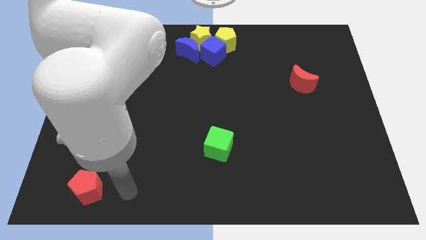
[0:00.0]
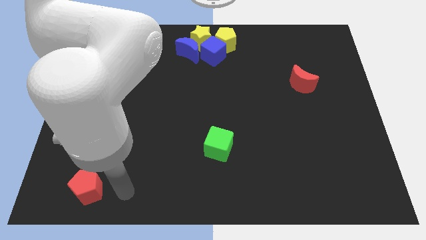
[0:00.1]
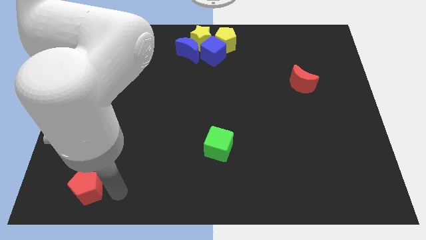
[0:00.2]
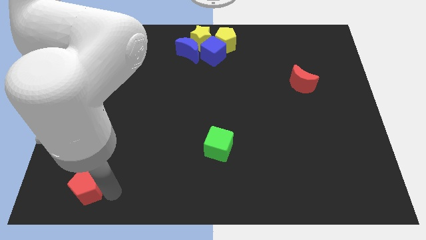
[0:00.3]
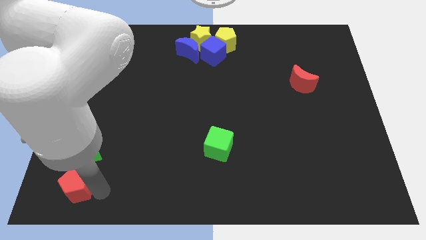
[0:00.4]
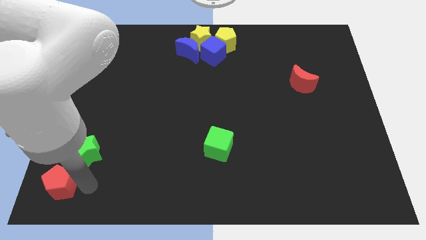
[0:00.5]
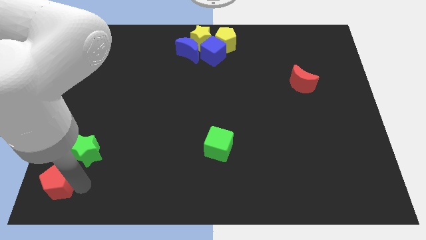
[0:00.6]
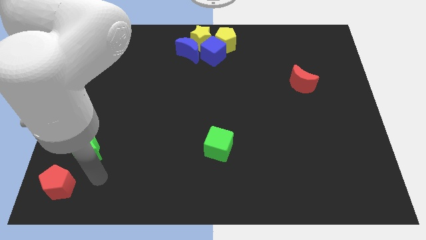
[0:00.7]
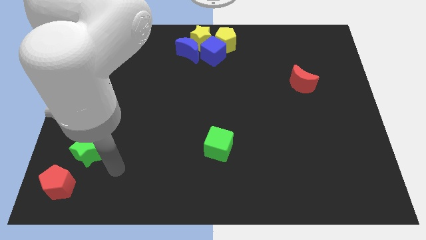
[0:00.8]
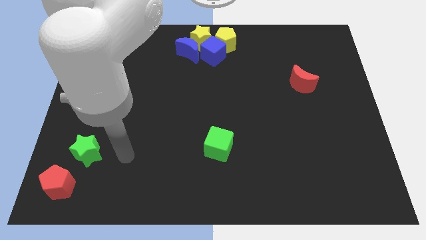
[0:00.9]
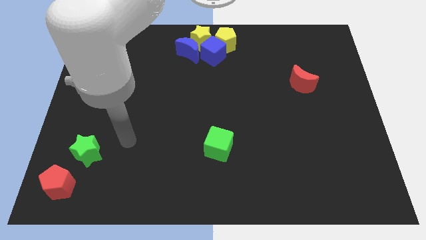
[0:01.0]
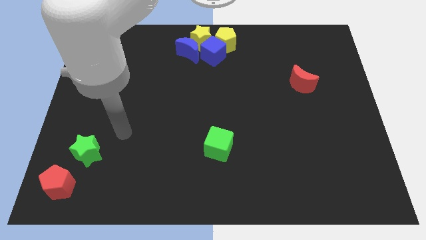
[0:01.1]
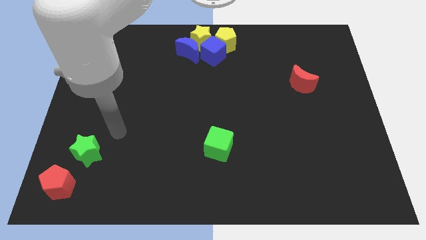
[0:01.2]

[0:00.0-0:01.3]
move the red pentagon to the bottom left corner

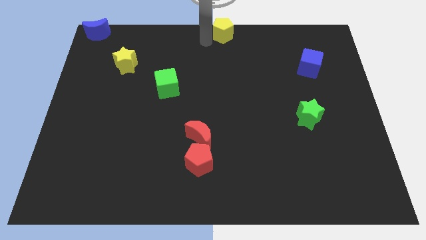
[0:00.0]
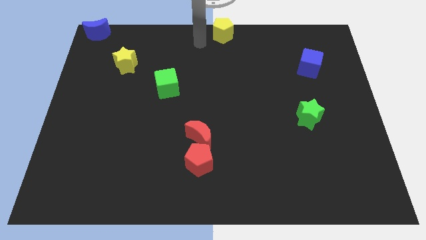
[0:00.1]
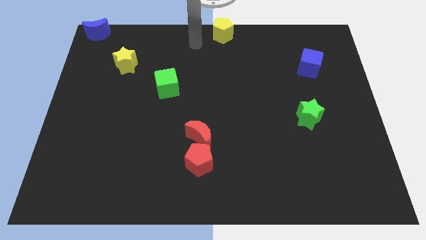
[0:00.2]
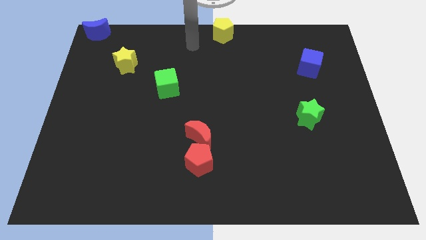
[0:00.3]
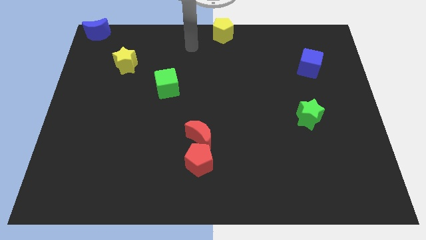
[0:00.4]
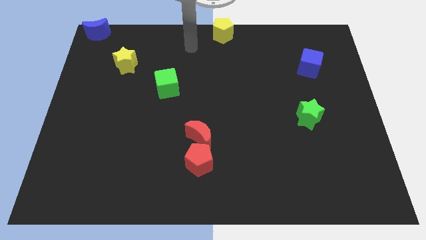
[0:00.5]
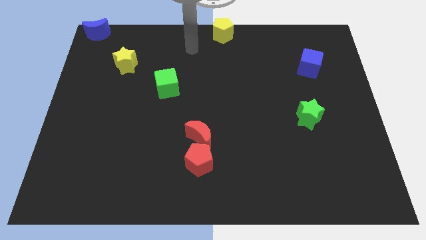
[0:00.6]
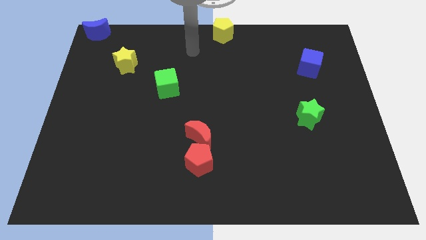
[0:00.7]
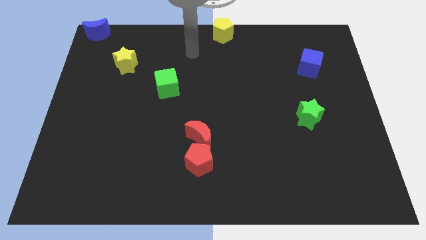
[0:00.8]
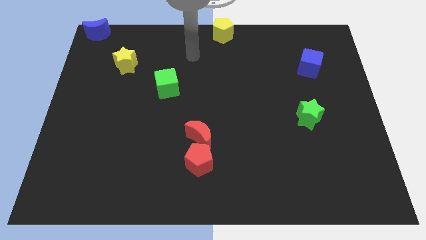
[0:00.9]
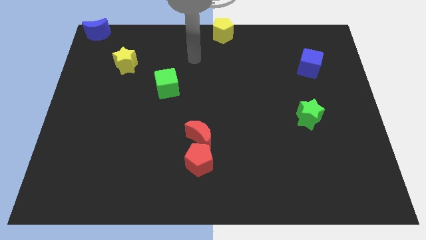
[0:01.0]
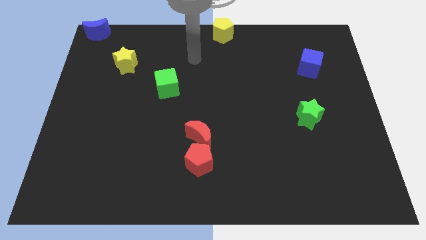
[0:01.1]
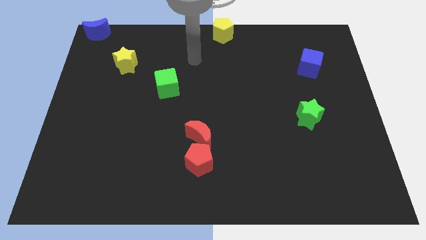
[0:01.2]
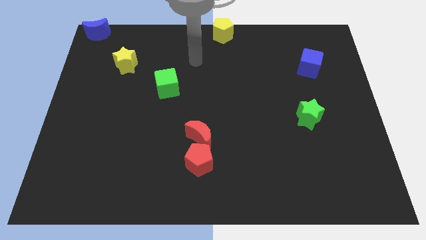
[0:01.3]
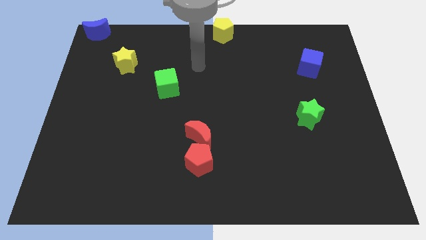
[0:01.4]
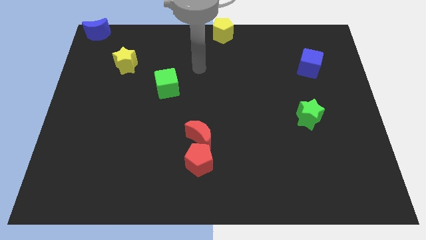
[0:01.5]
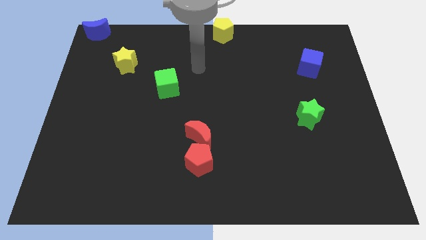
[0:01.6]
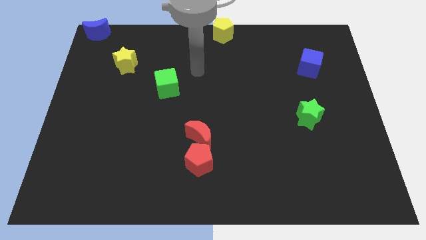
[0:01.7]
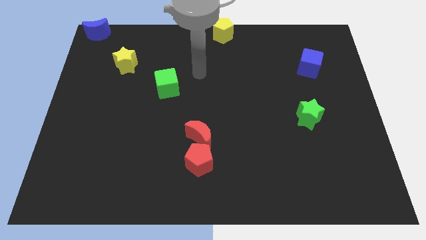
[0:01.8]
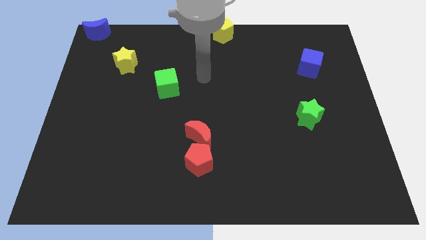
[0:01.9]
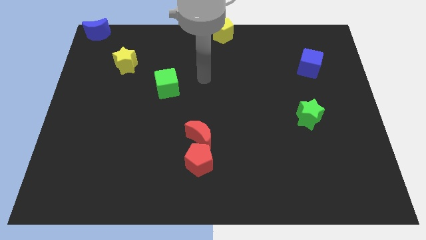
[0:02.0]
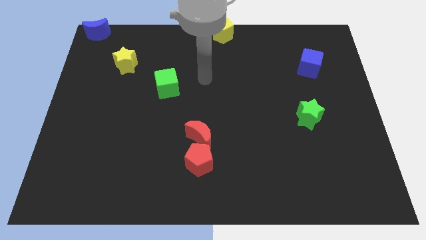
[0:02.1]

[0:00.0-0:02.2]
move the arm away from the yellow pentagon

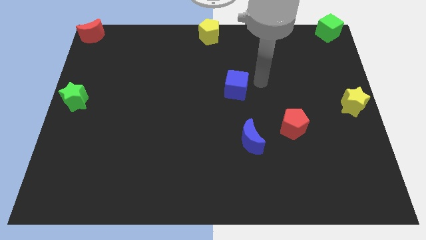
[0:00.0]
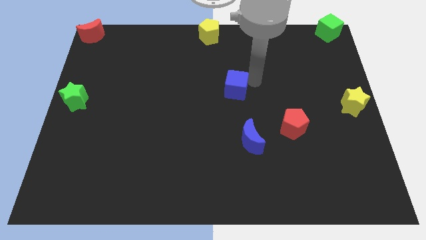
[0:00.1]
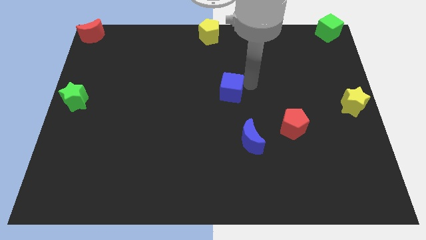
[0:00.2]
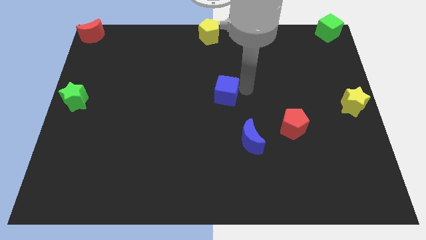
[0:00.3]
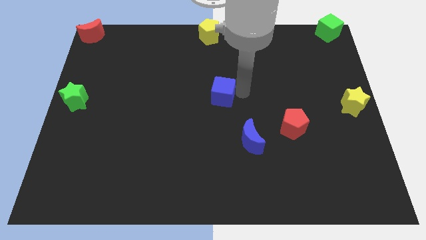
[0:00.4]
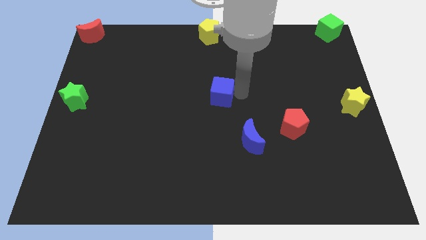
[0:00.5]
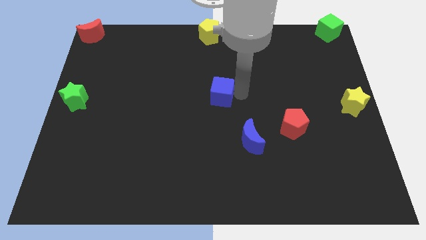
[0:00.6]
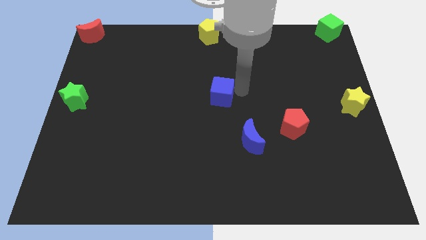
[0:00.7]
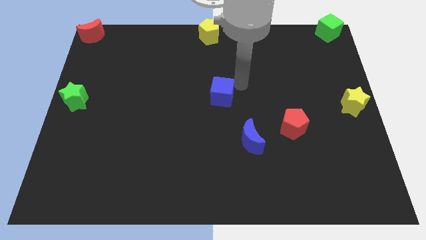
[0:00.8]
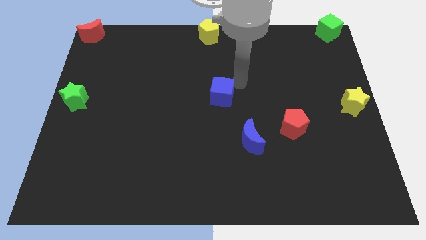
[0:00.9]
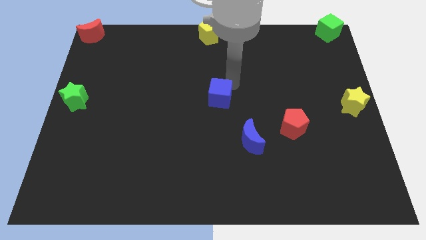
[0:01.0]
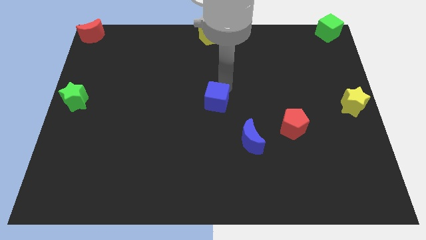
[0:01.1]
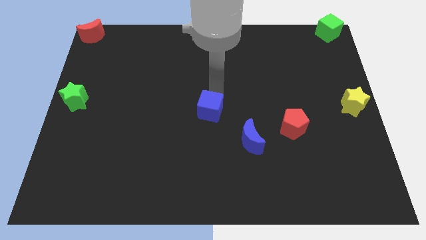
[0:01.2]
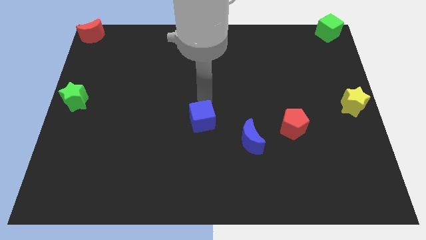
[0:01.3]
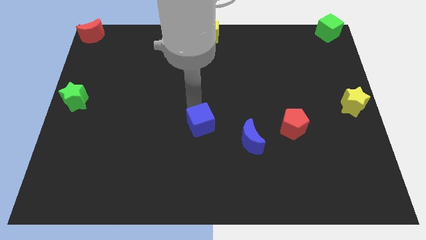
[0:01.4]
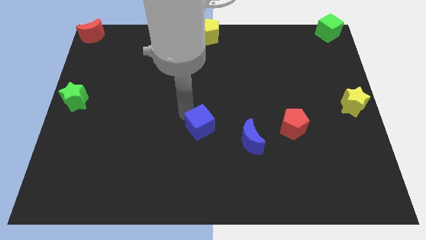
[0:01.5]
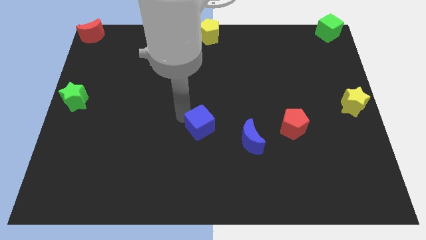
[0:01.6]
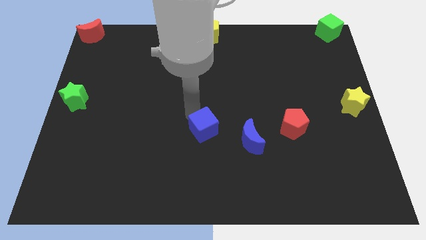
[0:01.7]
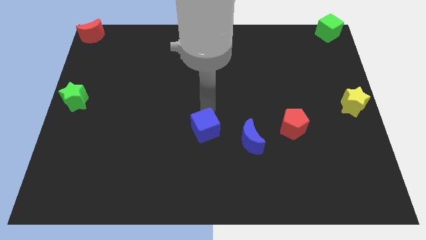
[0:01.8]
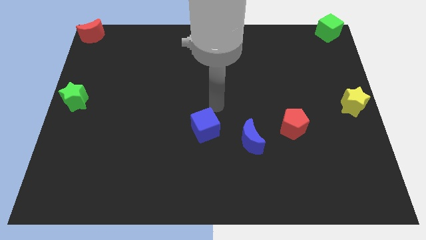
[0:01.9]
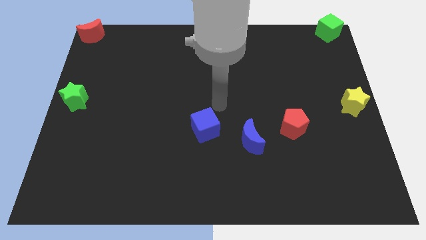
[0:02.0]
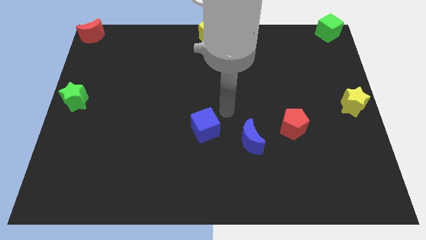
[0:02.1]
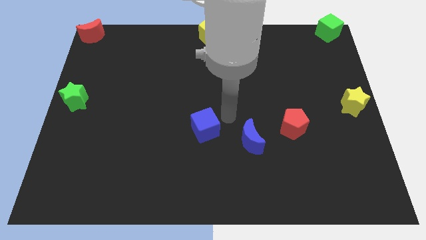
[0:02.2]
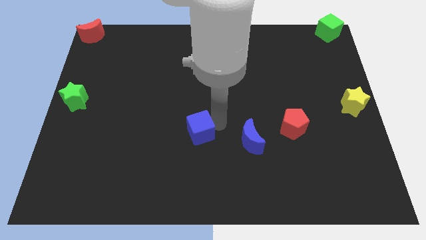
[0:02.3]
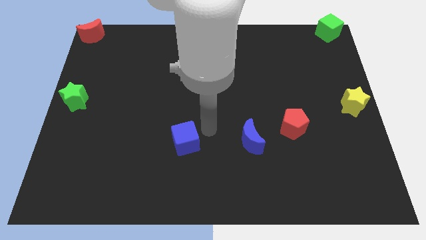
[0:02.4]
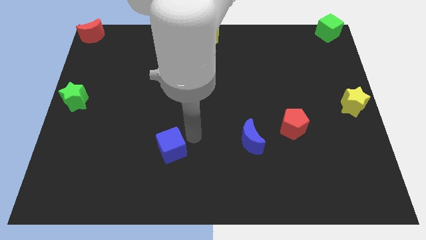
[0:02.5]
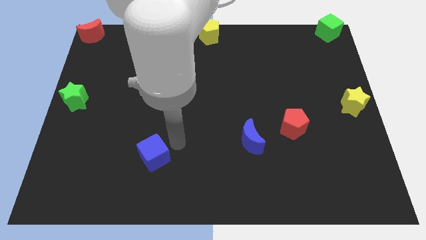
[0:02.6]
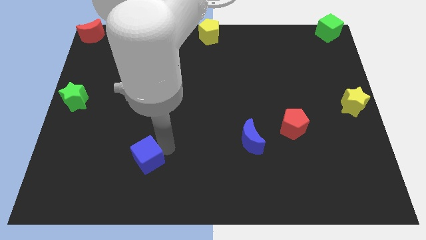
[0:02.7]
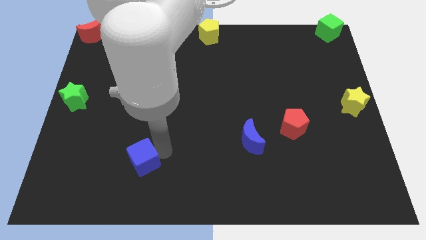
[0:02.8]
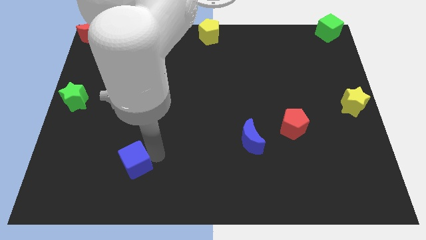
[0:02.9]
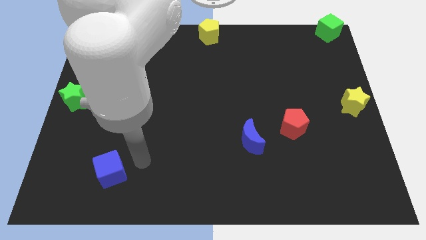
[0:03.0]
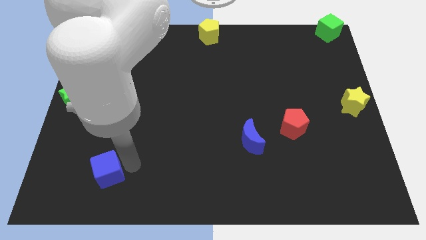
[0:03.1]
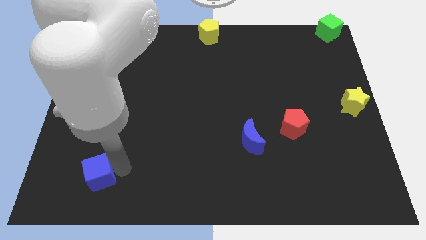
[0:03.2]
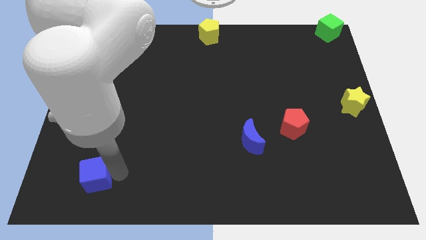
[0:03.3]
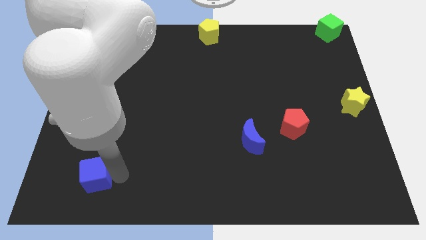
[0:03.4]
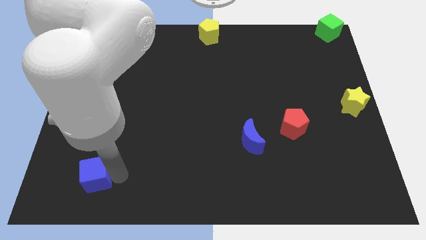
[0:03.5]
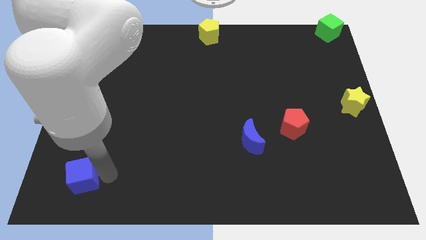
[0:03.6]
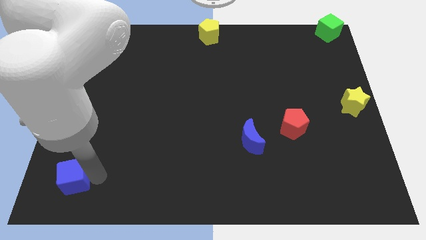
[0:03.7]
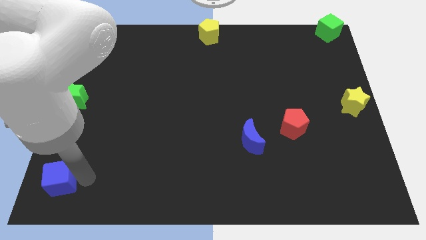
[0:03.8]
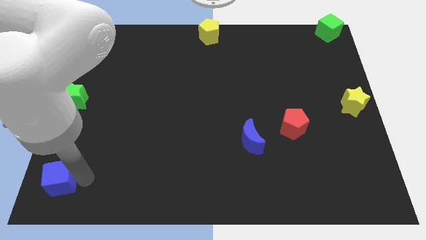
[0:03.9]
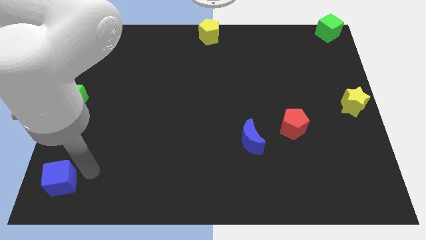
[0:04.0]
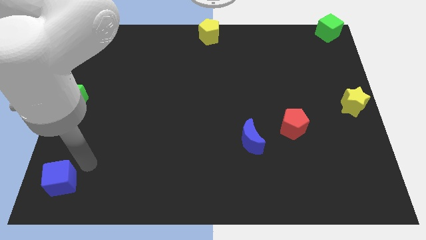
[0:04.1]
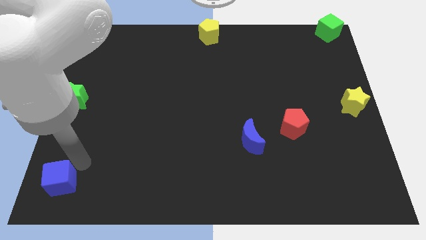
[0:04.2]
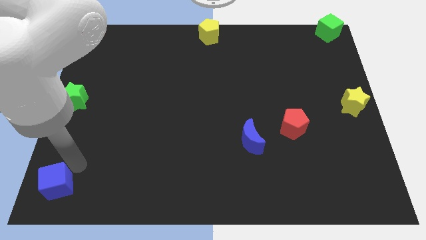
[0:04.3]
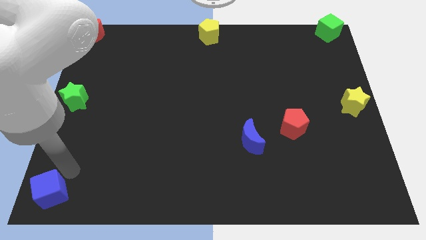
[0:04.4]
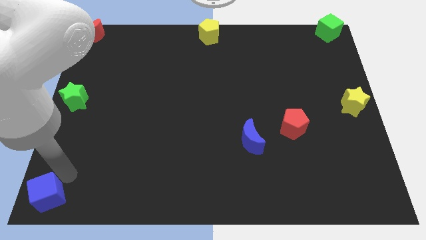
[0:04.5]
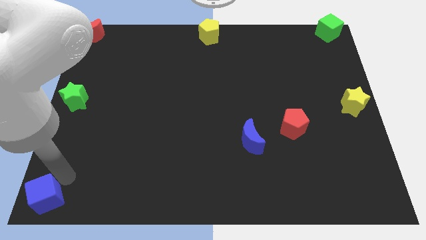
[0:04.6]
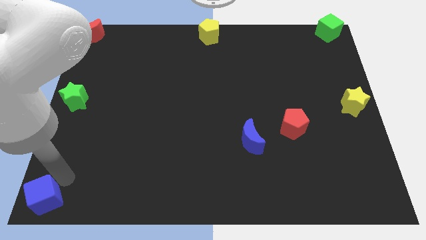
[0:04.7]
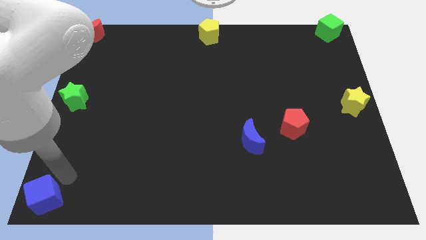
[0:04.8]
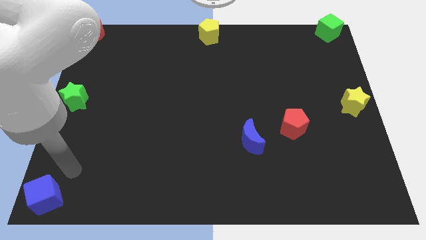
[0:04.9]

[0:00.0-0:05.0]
push the blue cube towards the bottom left of the board

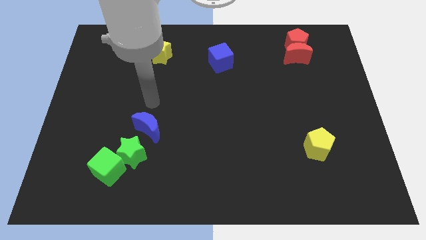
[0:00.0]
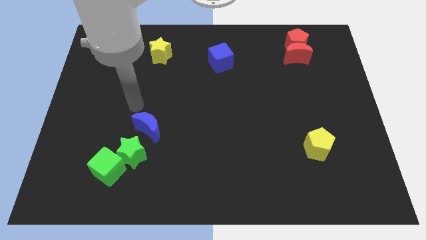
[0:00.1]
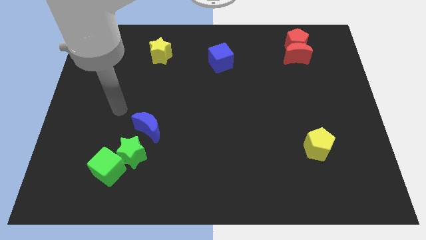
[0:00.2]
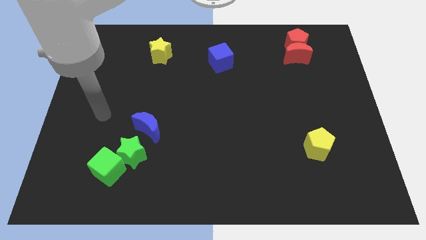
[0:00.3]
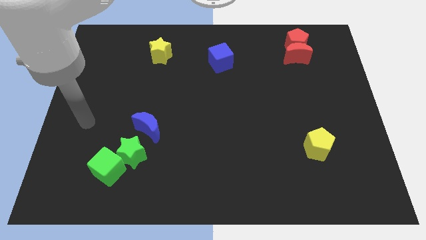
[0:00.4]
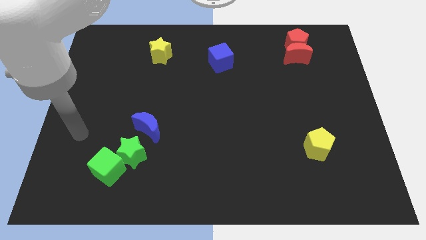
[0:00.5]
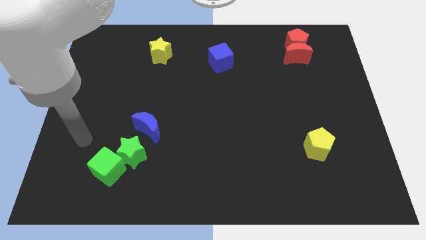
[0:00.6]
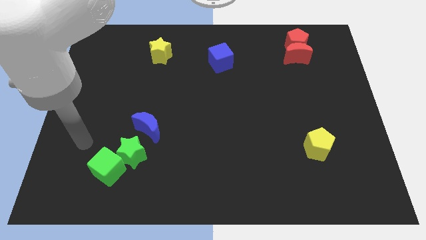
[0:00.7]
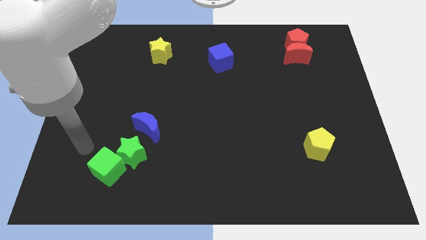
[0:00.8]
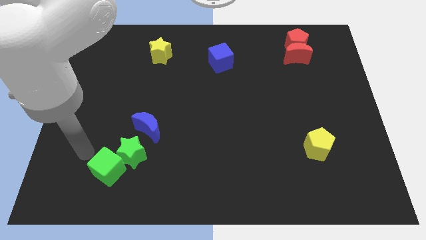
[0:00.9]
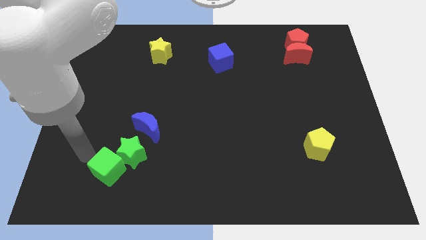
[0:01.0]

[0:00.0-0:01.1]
move arm left beside the green cube
